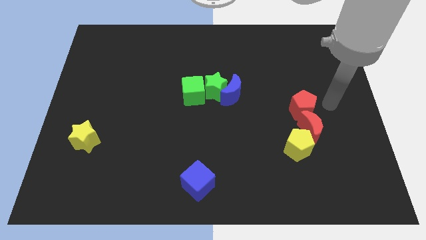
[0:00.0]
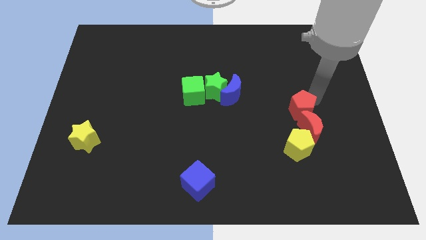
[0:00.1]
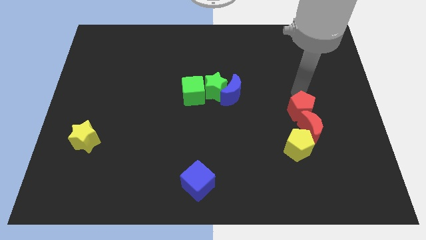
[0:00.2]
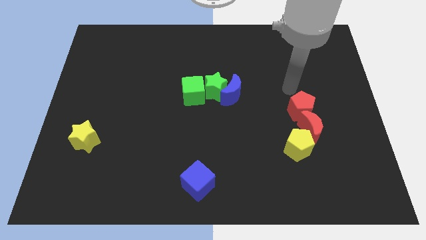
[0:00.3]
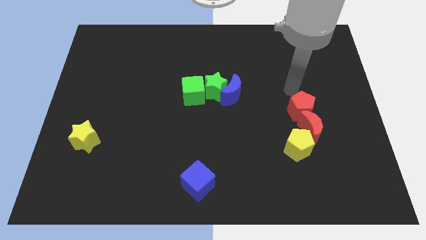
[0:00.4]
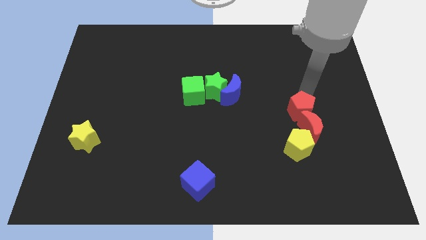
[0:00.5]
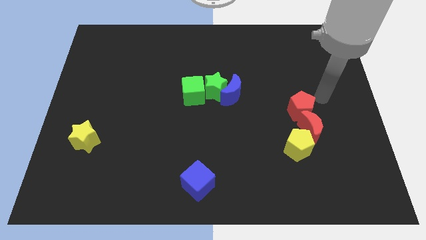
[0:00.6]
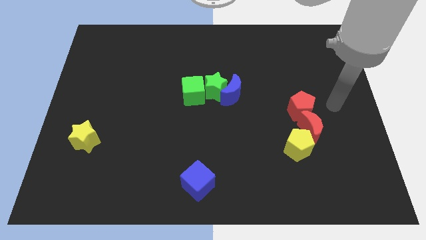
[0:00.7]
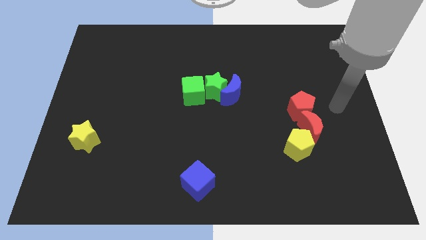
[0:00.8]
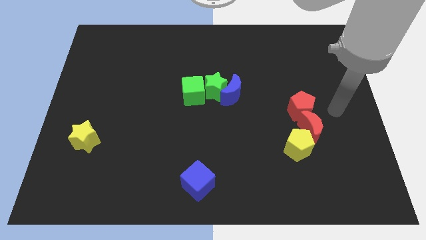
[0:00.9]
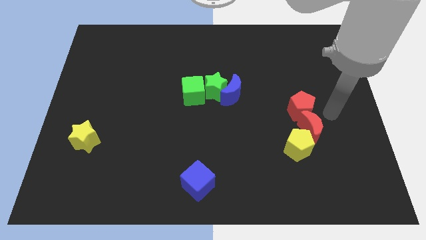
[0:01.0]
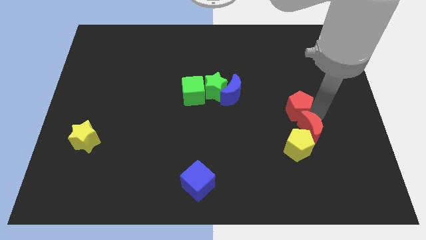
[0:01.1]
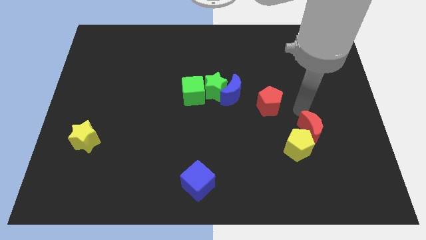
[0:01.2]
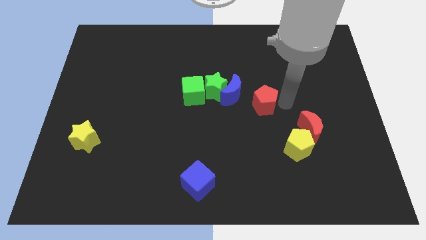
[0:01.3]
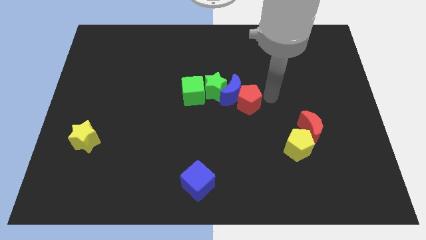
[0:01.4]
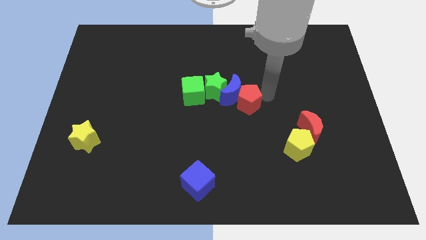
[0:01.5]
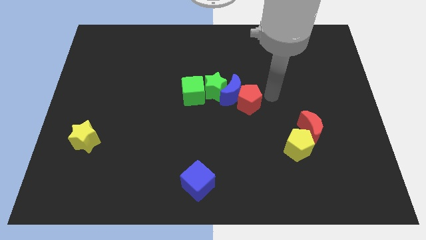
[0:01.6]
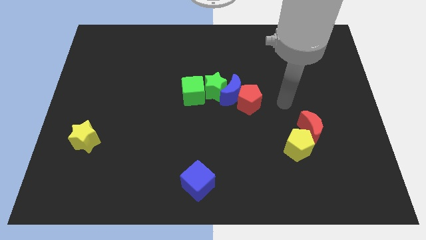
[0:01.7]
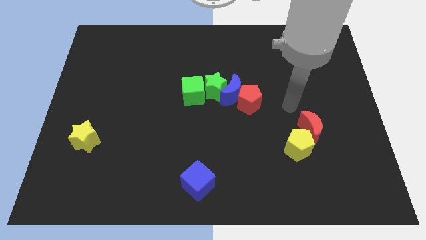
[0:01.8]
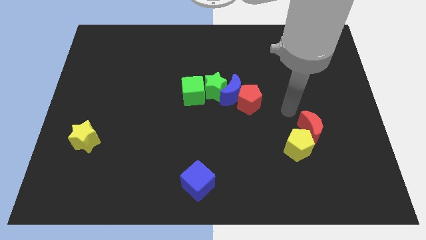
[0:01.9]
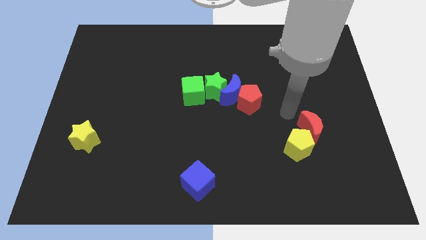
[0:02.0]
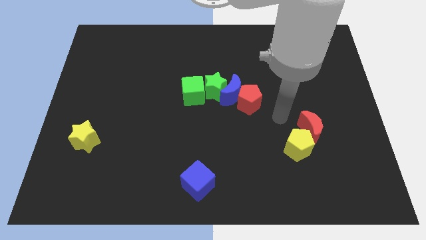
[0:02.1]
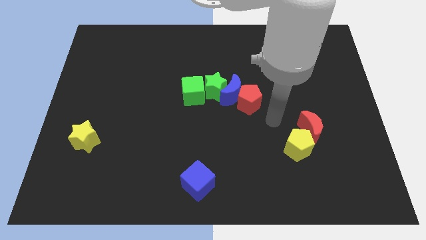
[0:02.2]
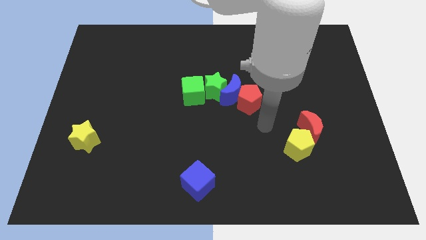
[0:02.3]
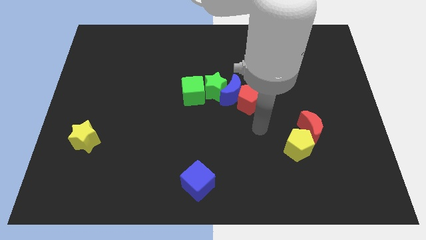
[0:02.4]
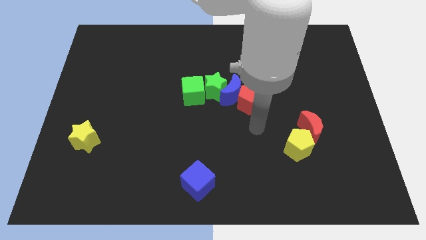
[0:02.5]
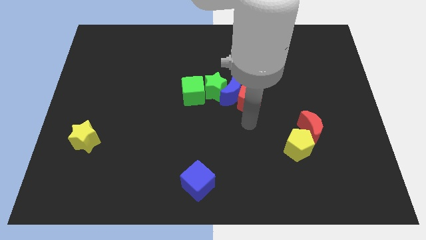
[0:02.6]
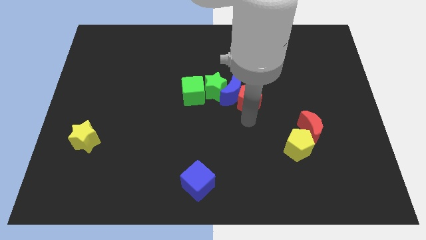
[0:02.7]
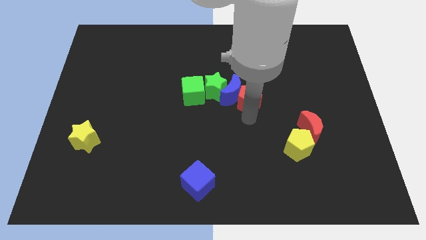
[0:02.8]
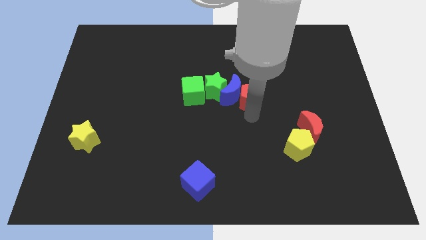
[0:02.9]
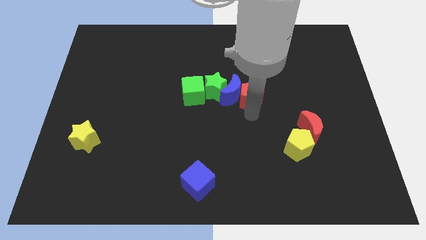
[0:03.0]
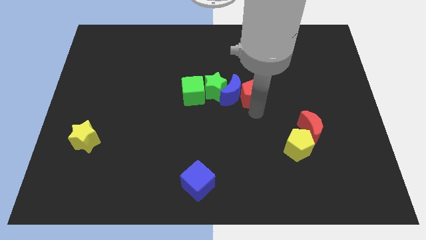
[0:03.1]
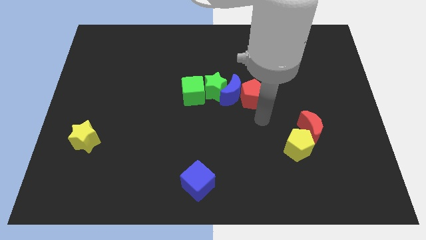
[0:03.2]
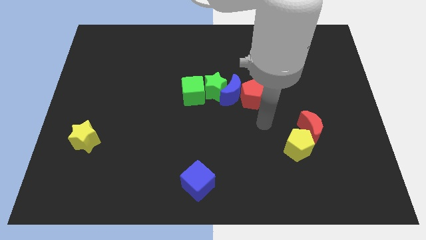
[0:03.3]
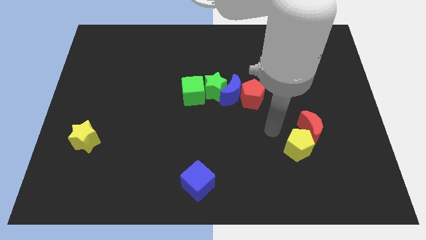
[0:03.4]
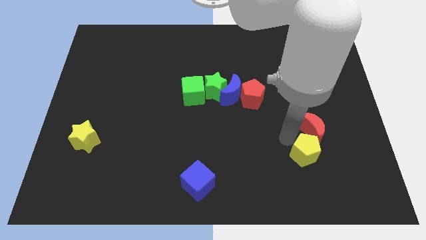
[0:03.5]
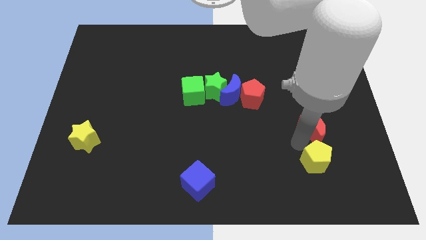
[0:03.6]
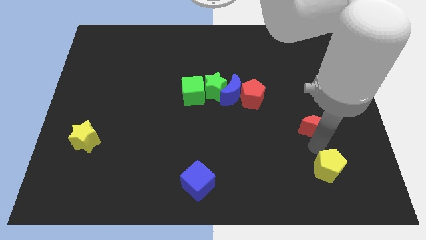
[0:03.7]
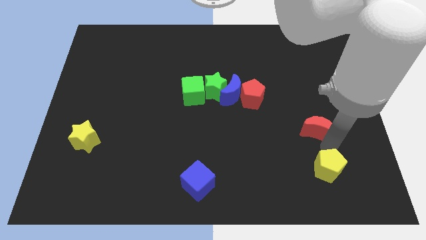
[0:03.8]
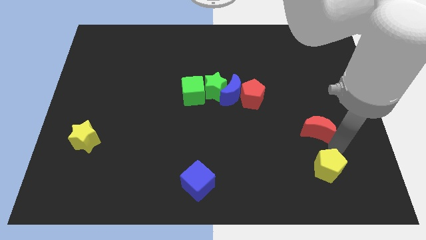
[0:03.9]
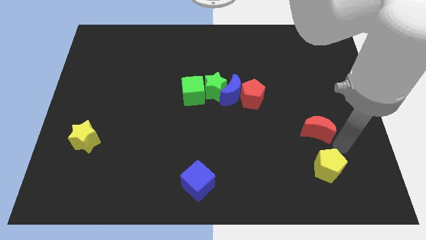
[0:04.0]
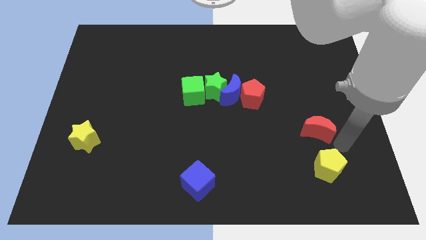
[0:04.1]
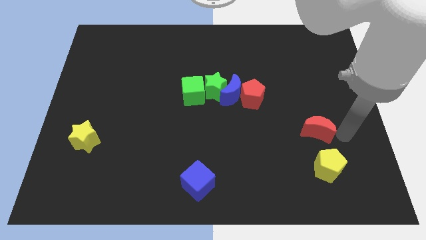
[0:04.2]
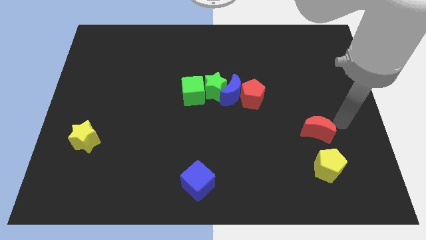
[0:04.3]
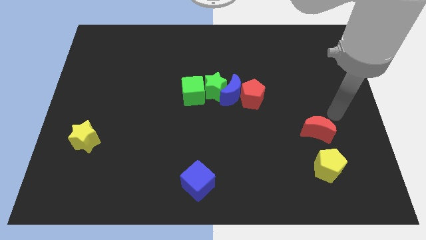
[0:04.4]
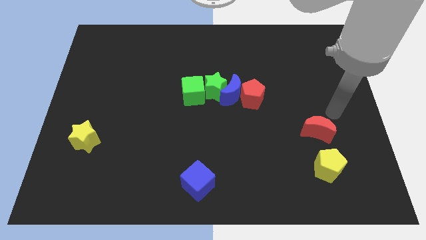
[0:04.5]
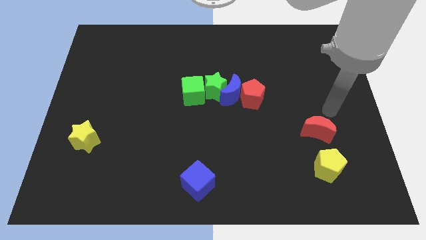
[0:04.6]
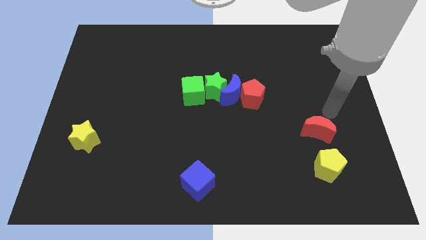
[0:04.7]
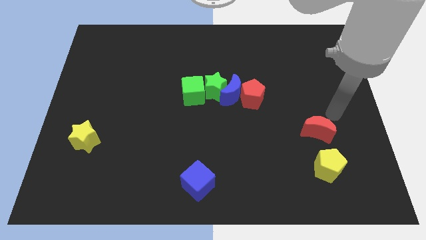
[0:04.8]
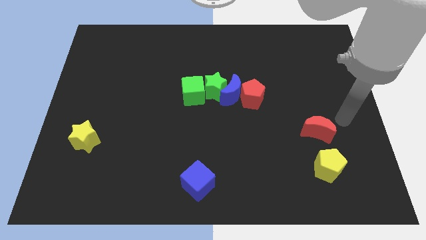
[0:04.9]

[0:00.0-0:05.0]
drag the red pentagon to the right side of the blue moon

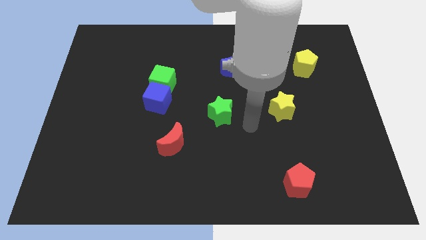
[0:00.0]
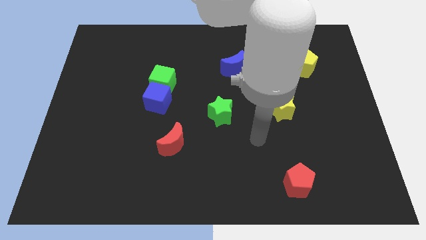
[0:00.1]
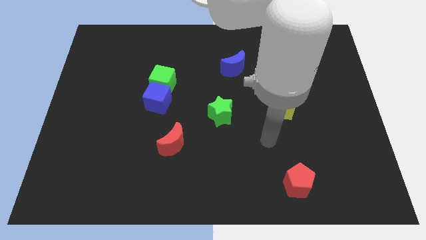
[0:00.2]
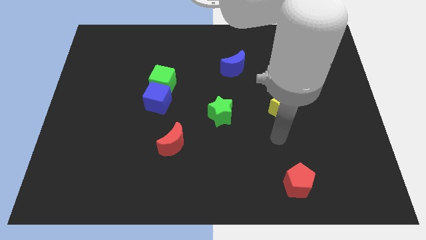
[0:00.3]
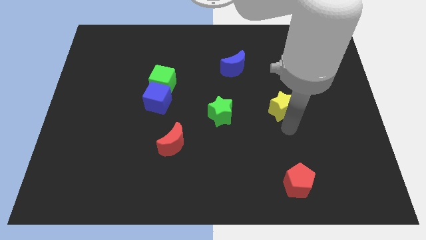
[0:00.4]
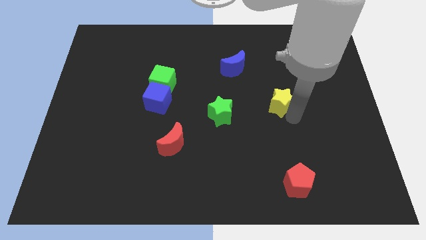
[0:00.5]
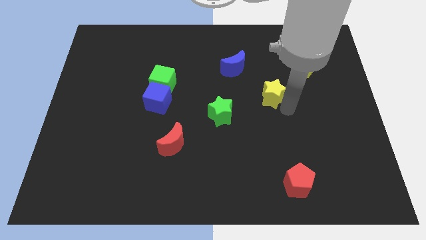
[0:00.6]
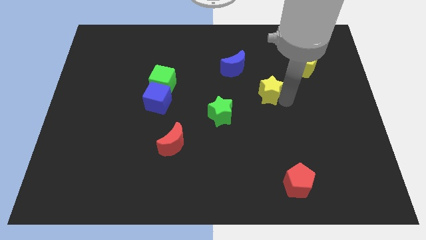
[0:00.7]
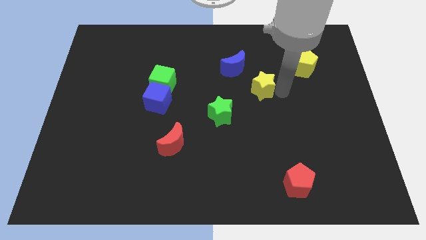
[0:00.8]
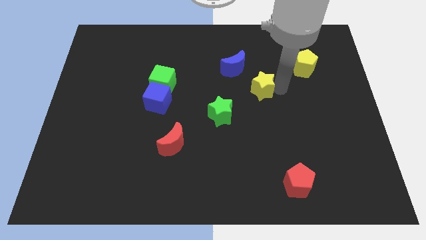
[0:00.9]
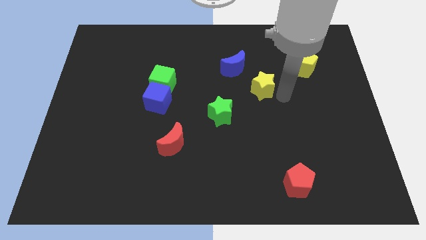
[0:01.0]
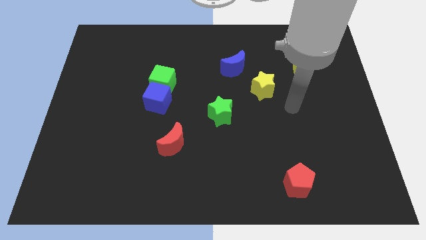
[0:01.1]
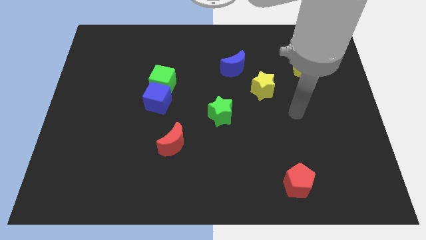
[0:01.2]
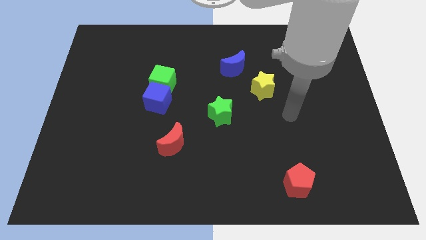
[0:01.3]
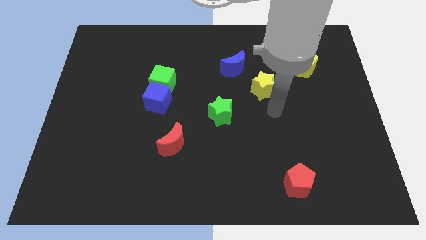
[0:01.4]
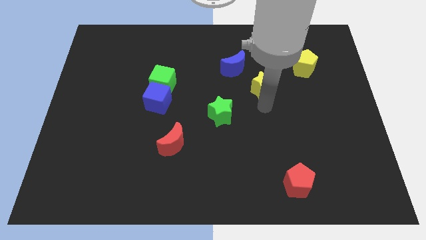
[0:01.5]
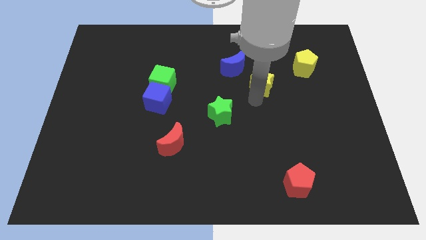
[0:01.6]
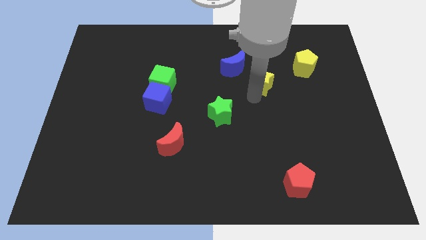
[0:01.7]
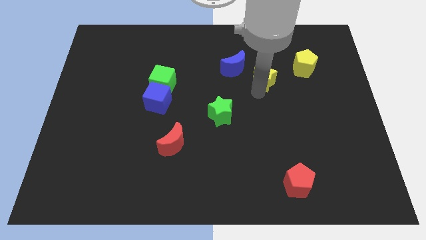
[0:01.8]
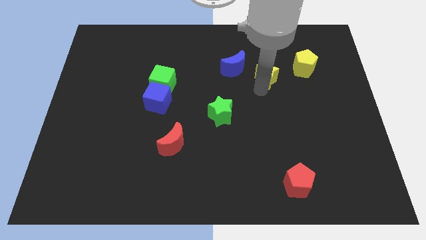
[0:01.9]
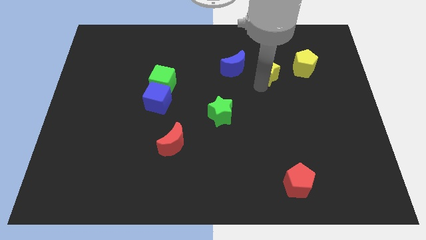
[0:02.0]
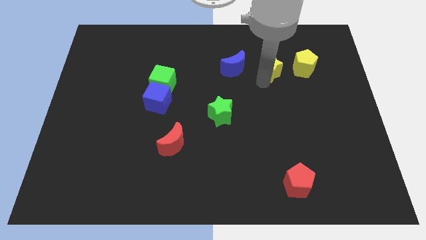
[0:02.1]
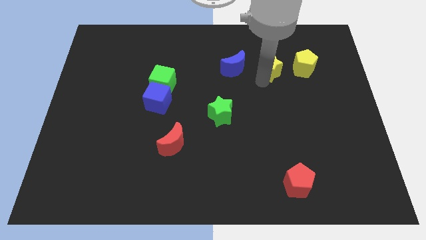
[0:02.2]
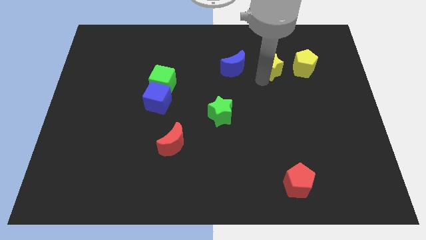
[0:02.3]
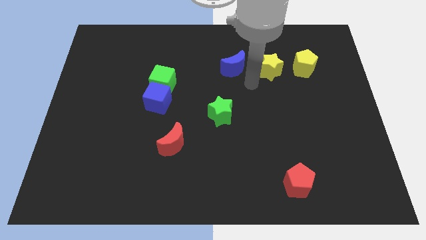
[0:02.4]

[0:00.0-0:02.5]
place yellow star in between the yellow pentagon and the blue crescent

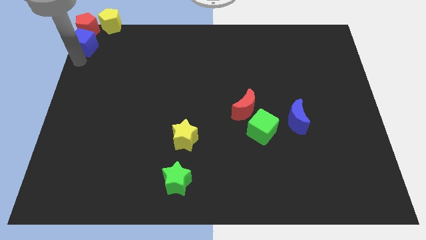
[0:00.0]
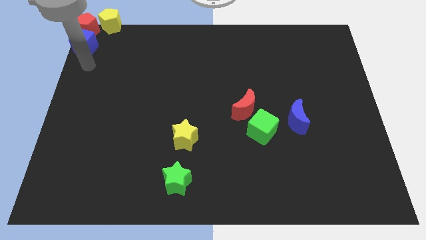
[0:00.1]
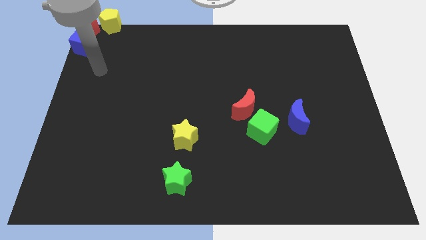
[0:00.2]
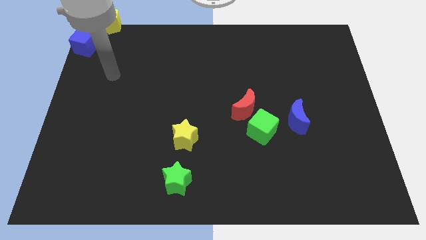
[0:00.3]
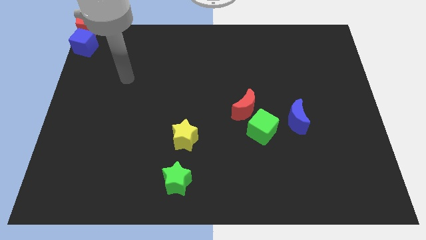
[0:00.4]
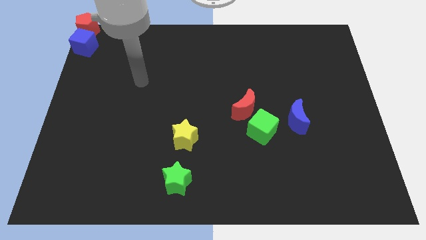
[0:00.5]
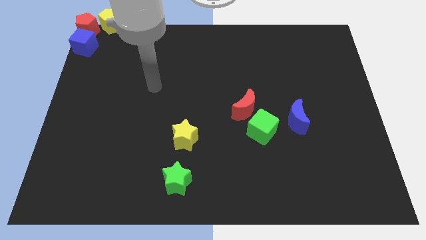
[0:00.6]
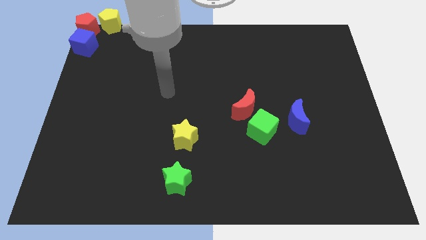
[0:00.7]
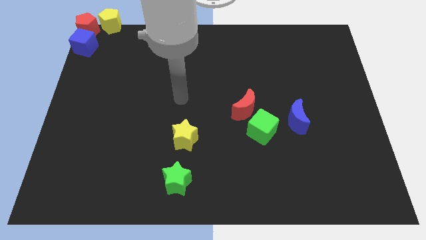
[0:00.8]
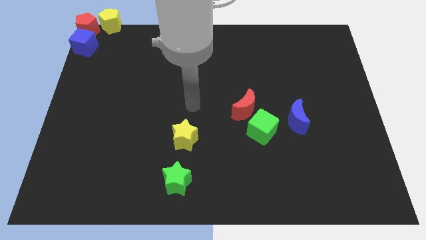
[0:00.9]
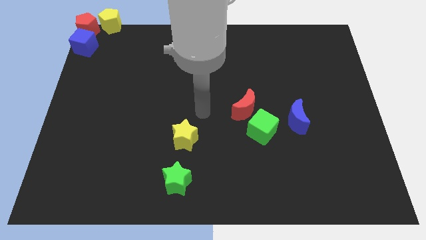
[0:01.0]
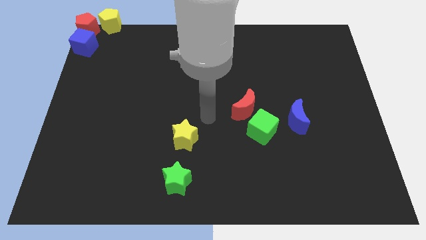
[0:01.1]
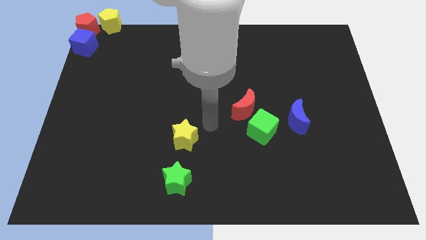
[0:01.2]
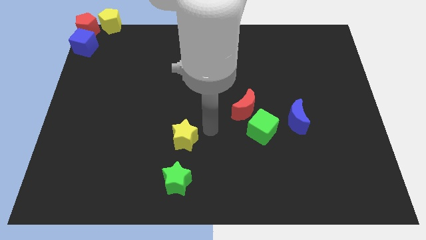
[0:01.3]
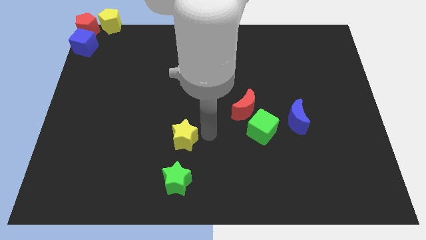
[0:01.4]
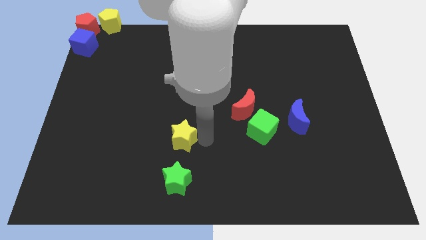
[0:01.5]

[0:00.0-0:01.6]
place the arm right to the yellow star
